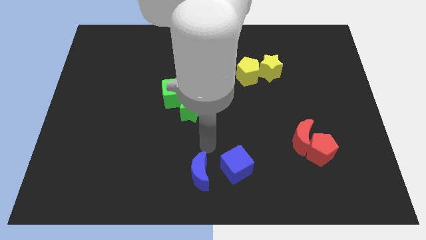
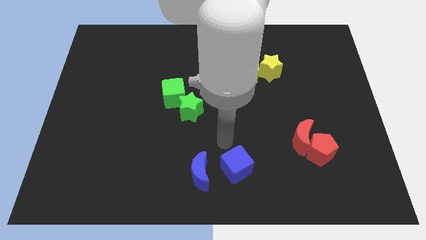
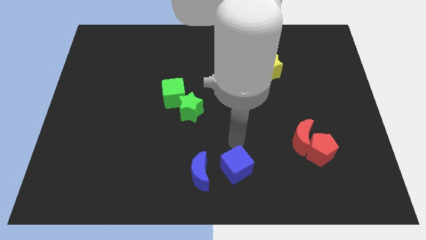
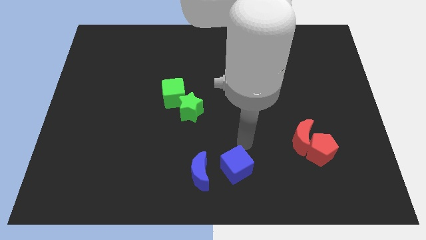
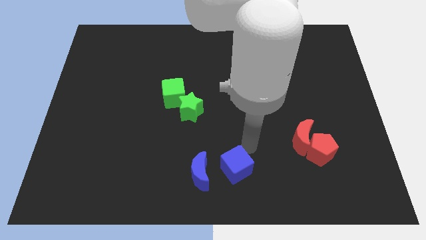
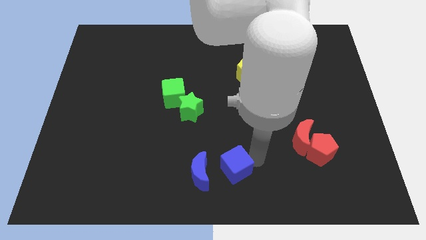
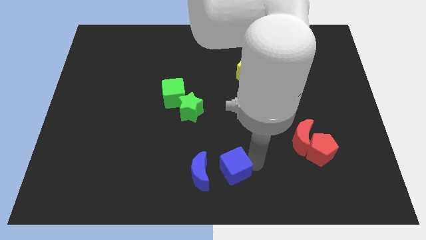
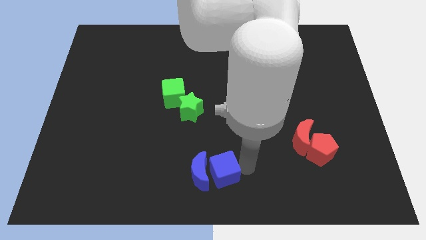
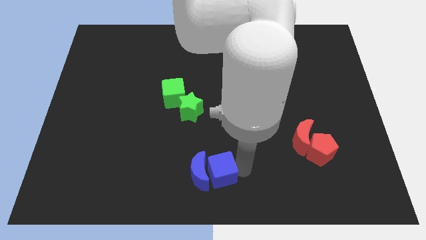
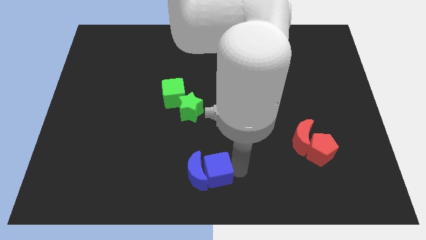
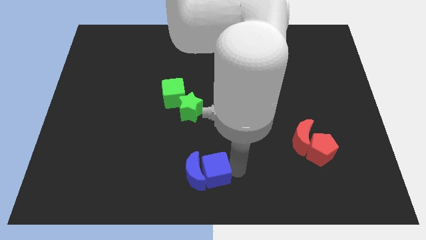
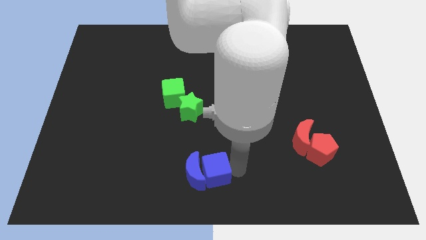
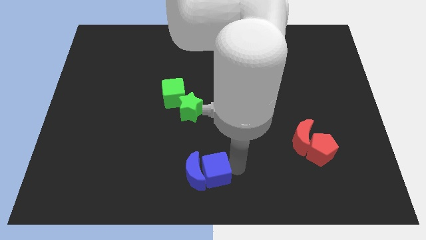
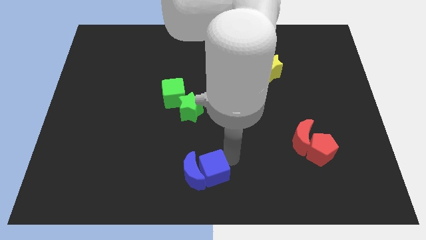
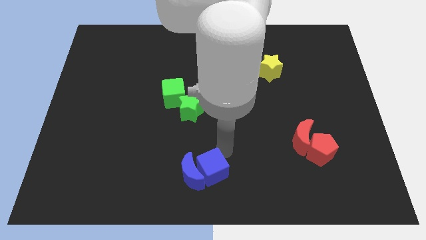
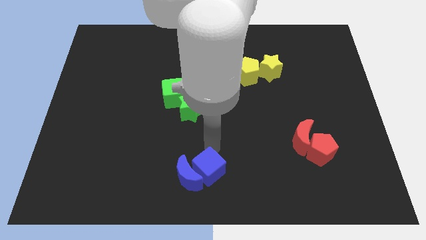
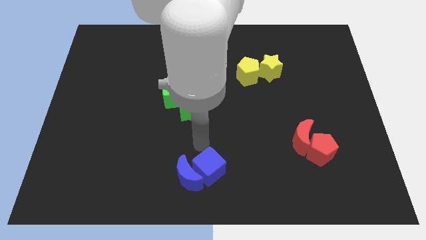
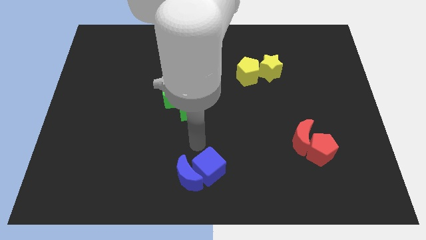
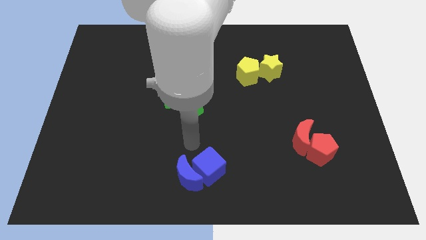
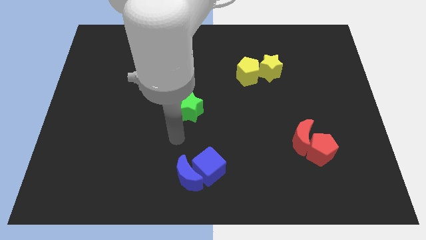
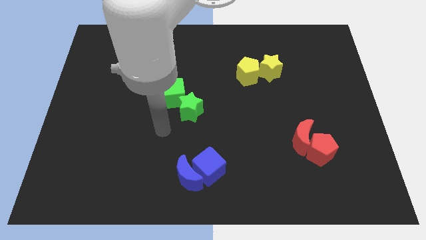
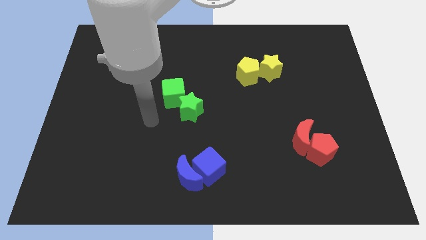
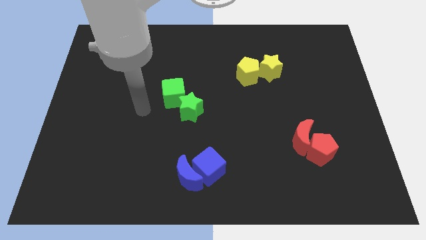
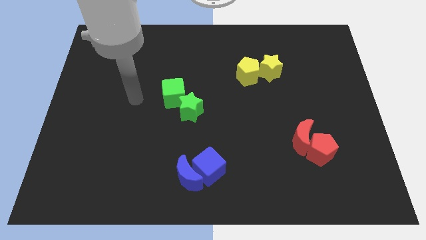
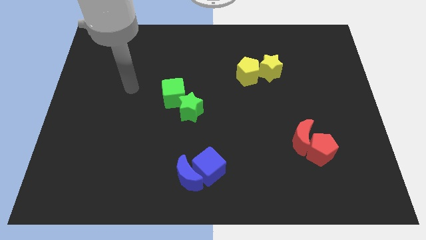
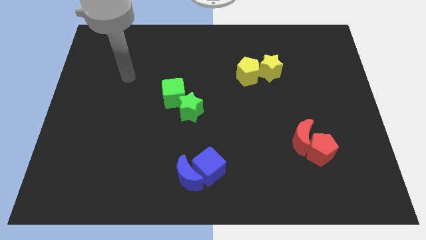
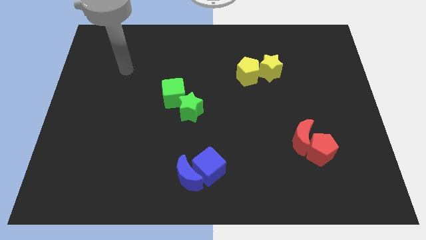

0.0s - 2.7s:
move your arm away from the blue cube

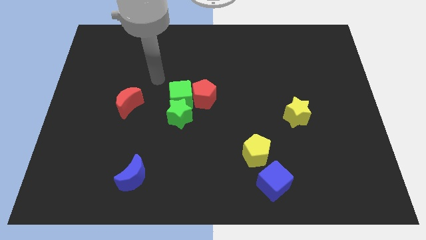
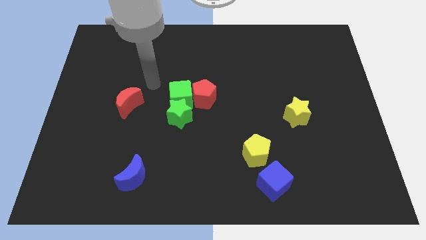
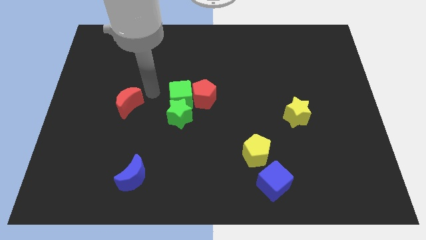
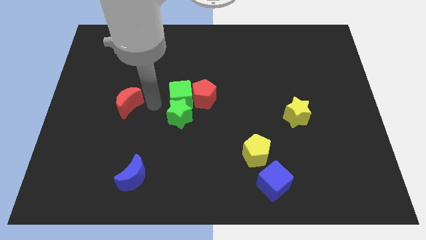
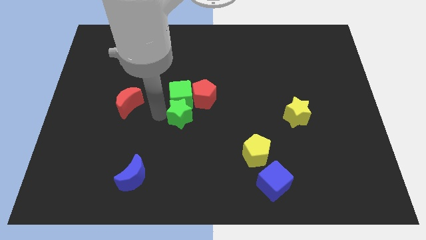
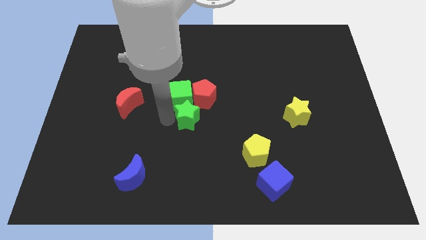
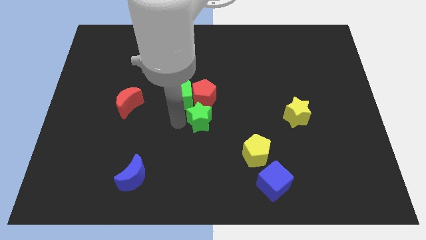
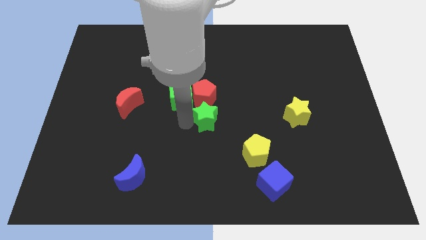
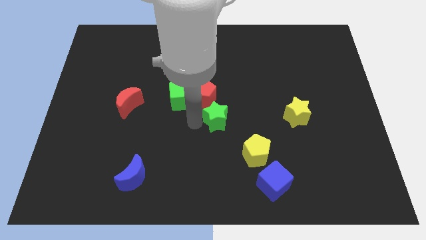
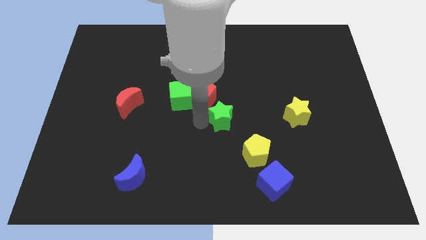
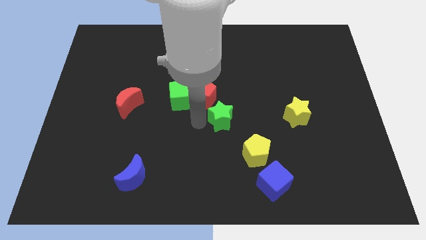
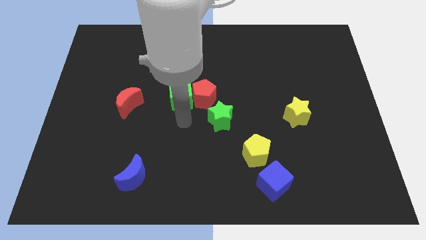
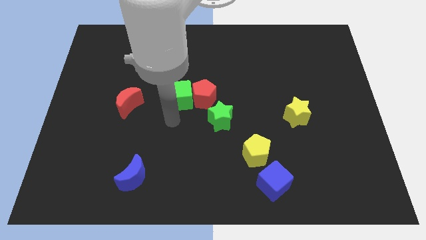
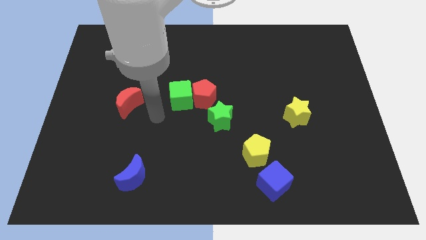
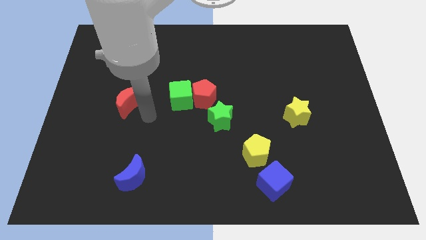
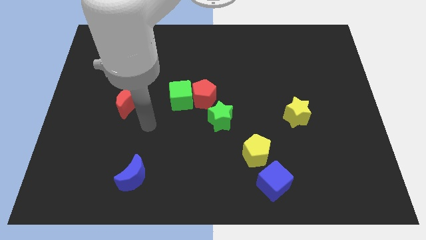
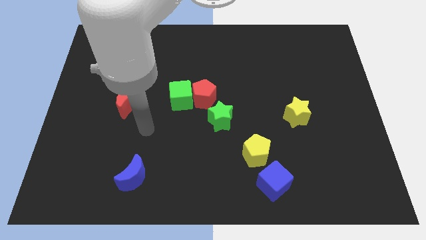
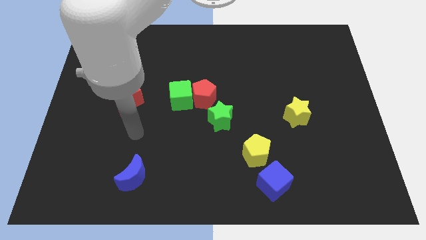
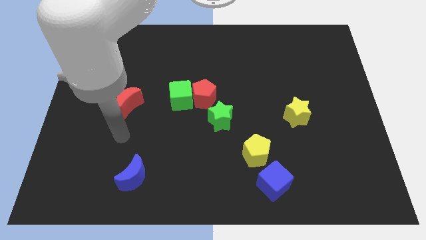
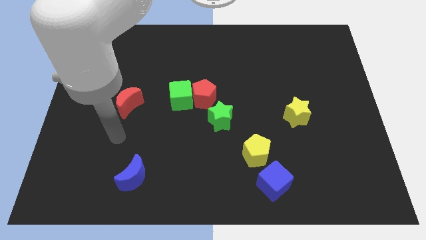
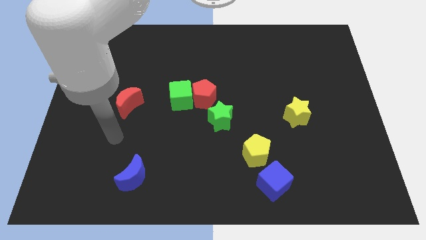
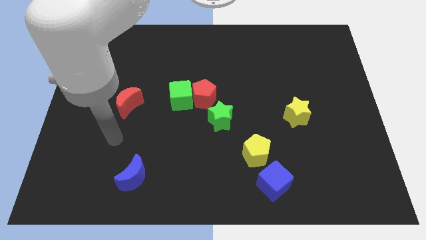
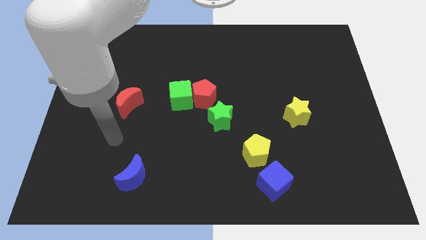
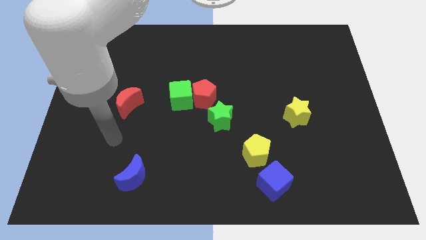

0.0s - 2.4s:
place the green star to the right side of the red pentagon

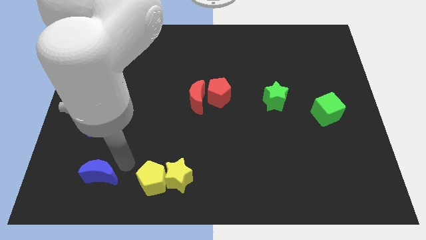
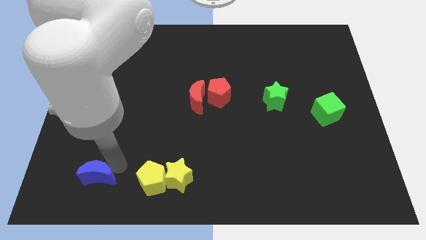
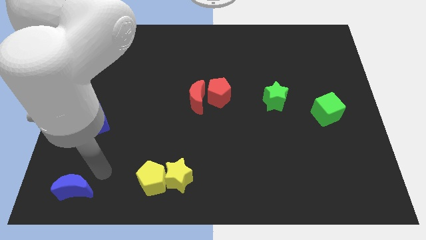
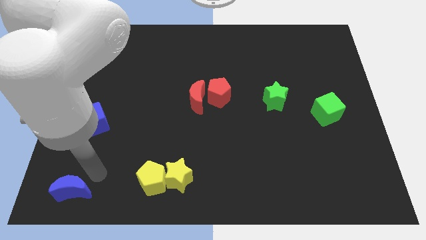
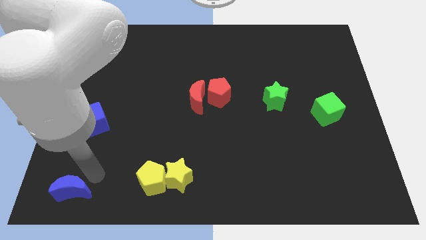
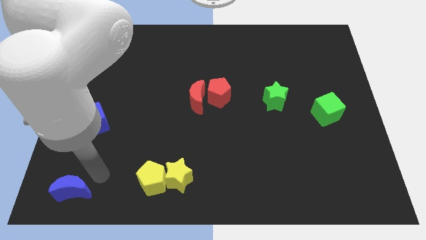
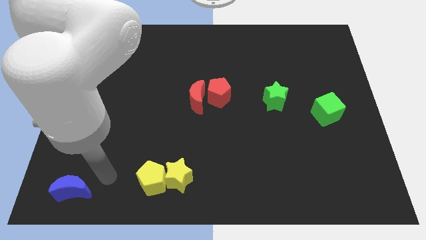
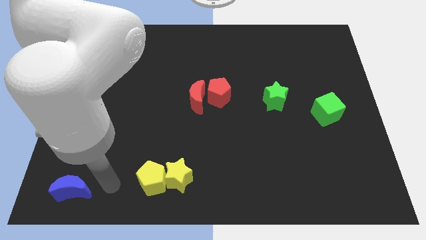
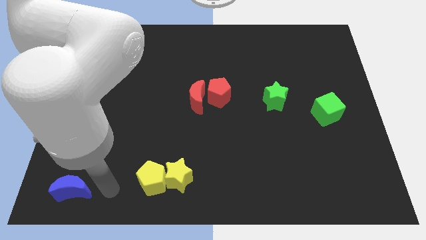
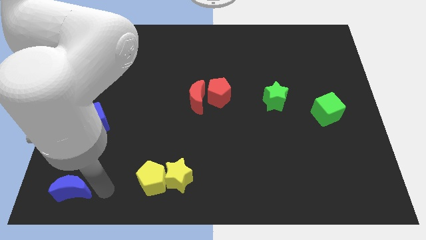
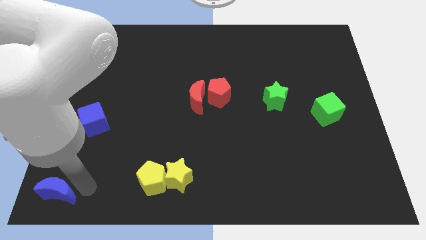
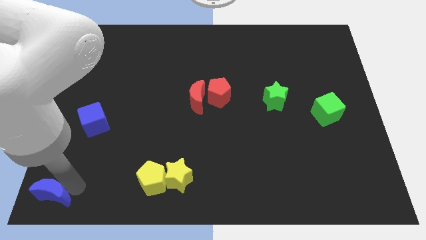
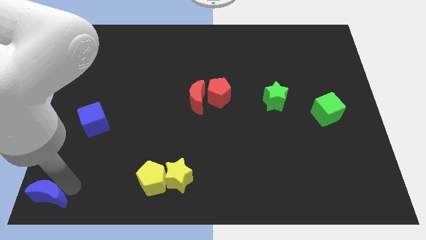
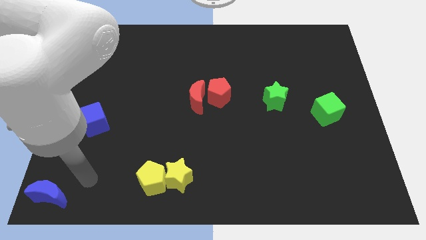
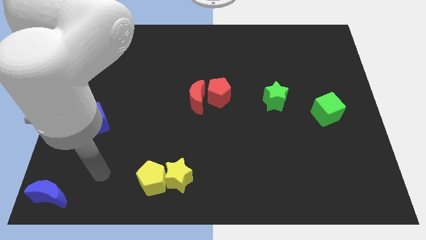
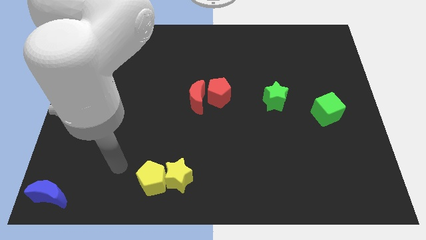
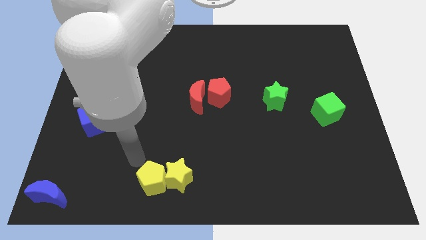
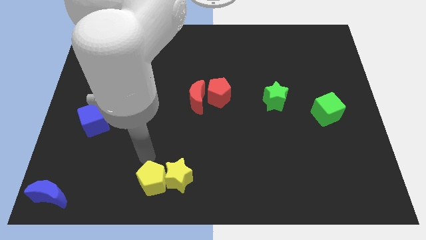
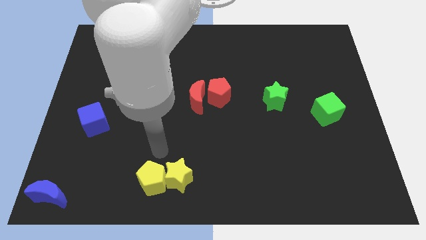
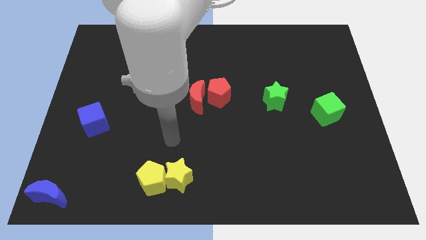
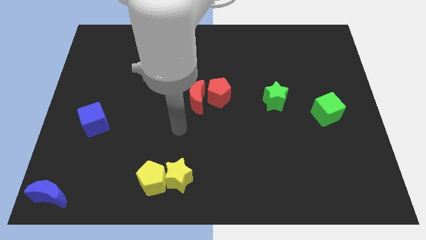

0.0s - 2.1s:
push the blue moon to the bottom left corner

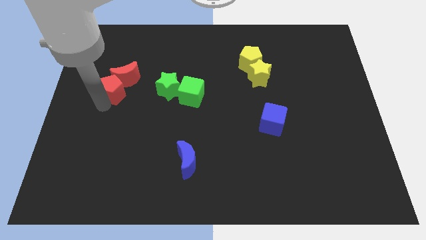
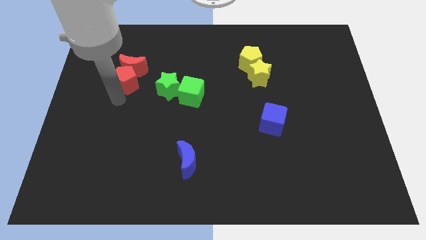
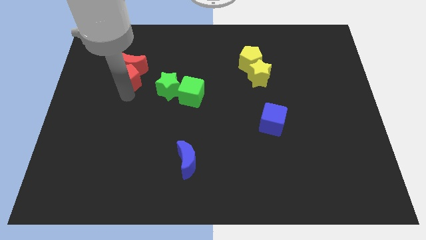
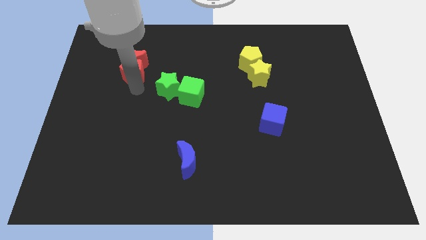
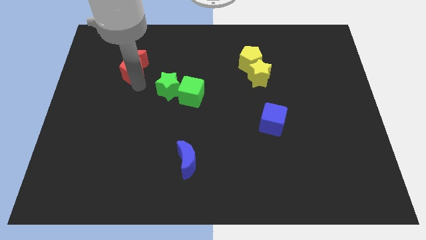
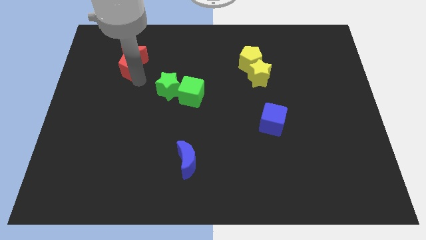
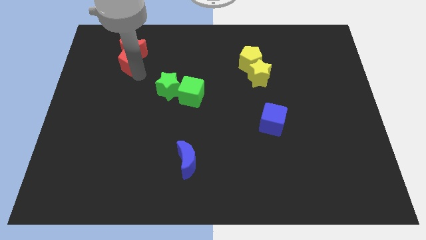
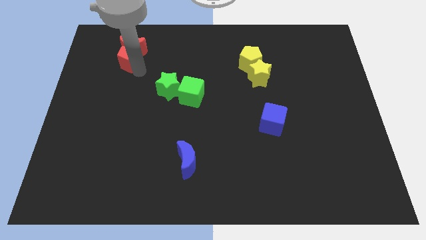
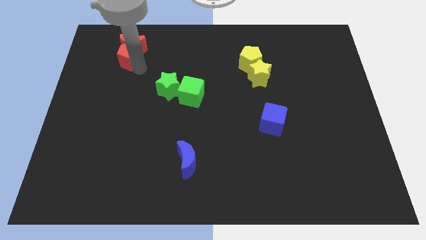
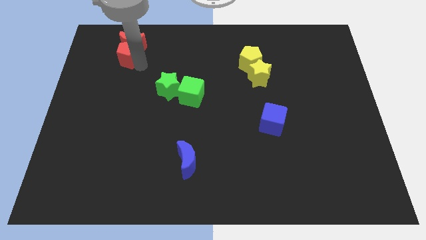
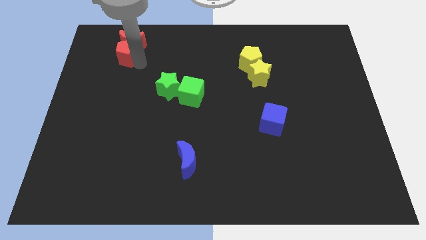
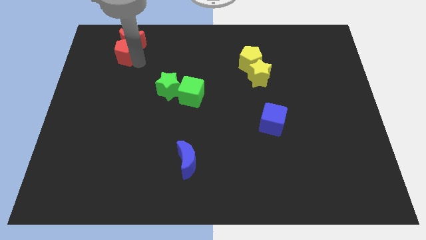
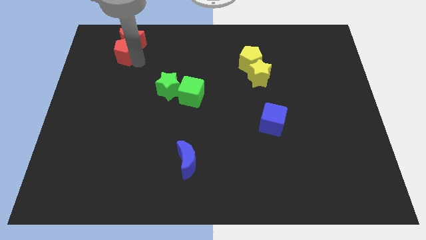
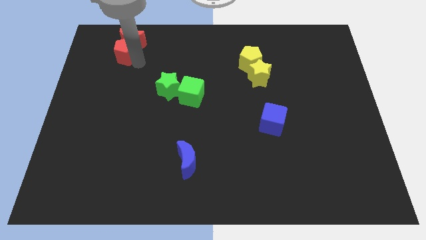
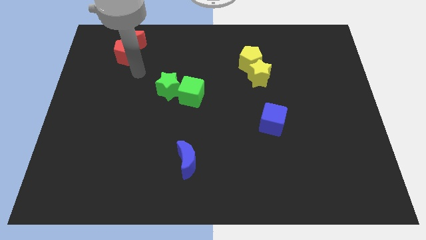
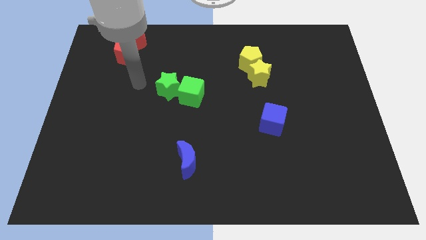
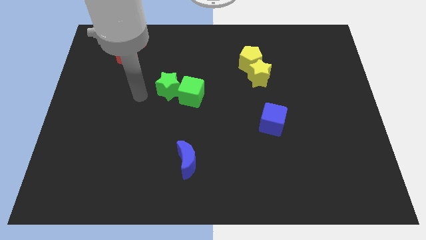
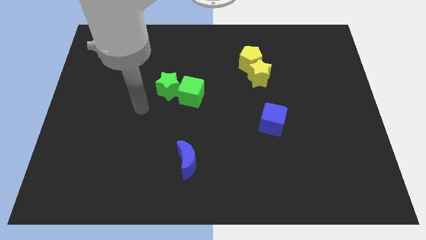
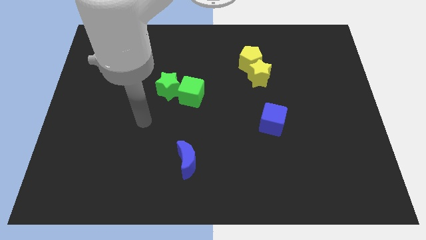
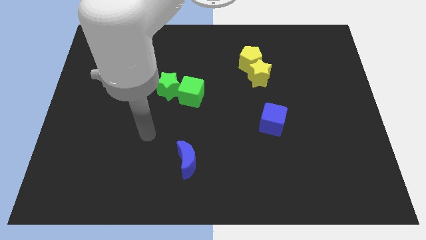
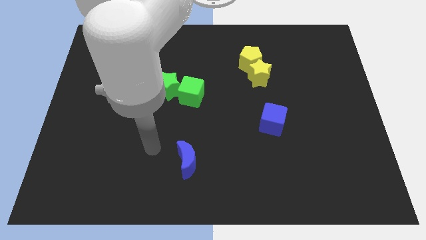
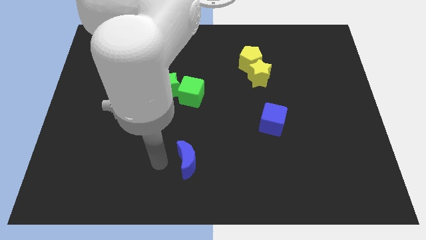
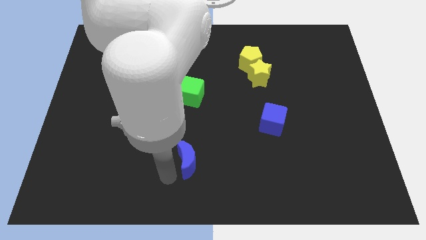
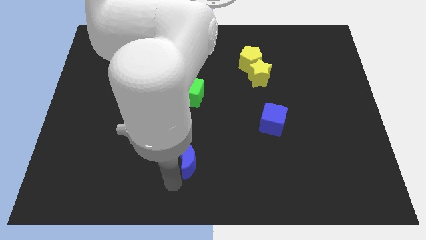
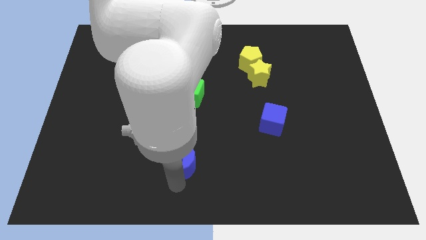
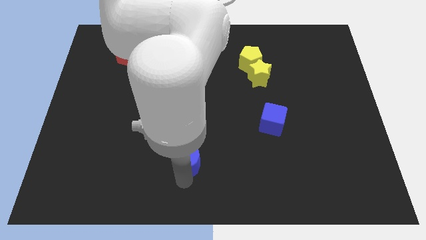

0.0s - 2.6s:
push red pentago to the center top
